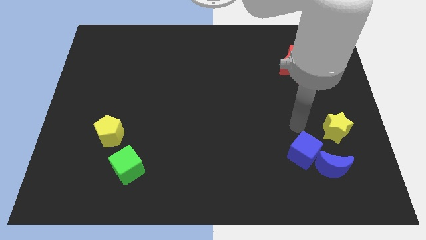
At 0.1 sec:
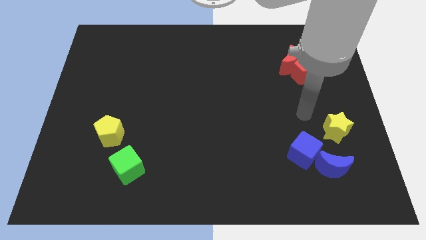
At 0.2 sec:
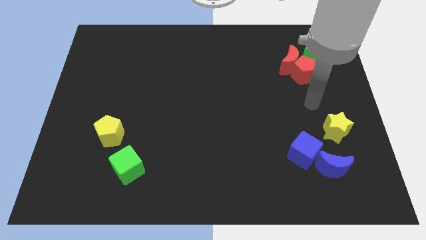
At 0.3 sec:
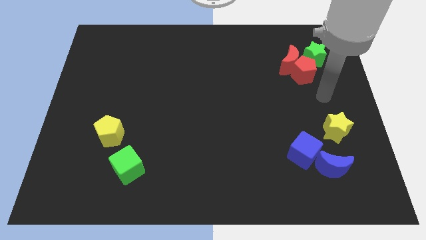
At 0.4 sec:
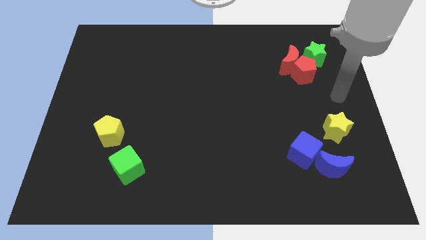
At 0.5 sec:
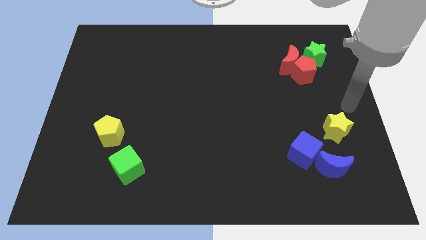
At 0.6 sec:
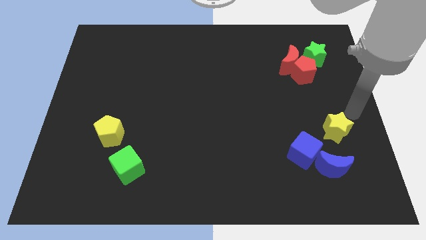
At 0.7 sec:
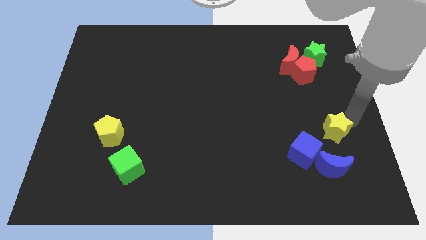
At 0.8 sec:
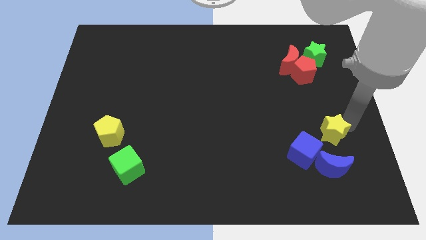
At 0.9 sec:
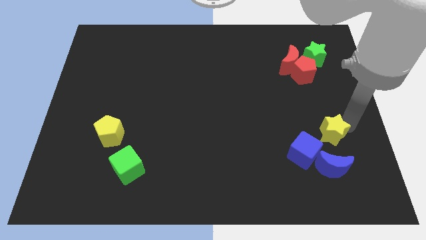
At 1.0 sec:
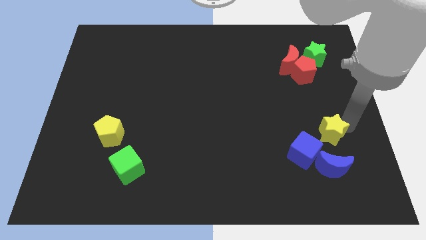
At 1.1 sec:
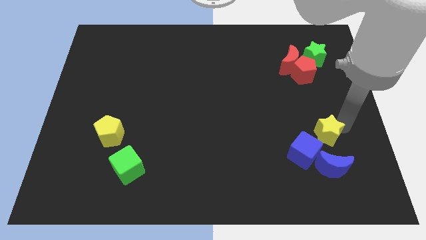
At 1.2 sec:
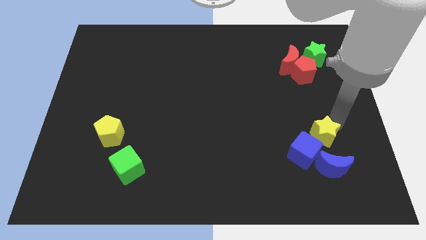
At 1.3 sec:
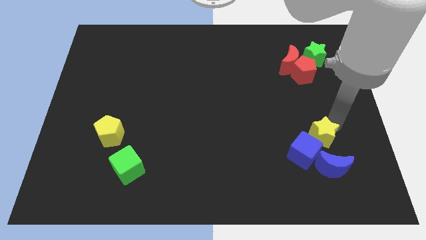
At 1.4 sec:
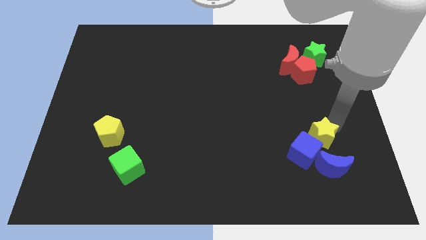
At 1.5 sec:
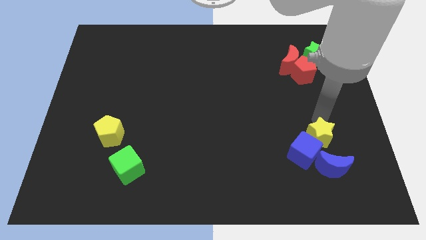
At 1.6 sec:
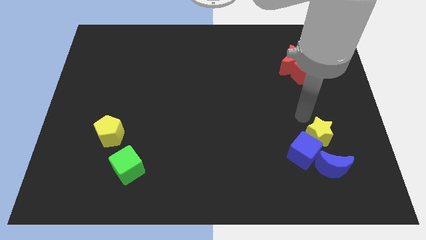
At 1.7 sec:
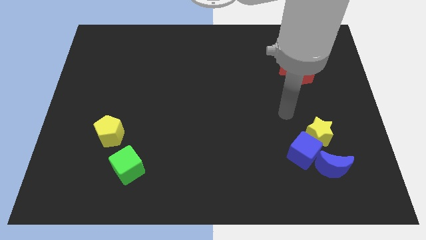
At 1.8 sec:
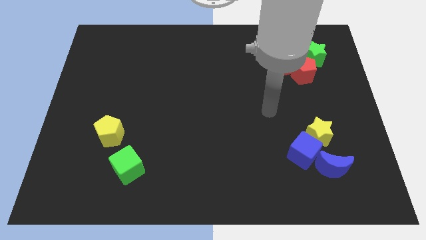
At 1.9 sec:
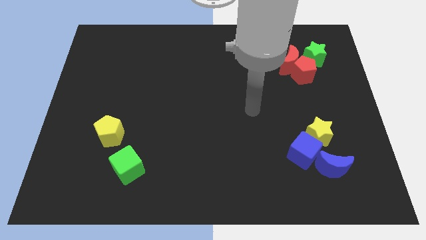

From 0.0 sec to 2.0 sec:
move the yellow star above to the blue cube

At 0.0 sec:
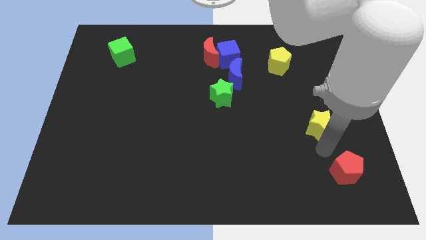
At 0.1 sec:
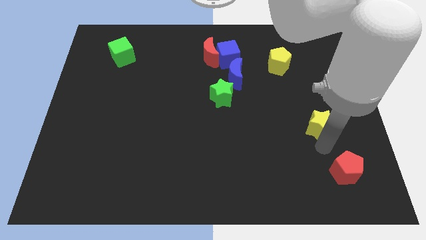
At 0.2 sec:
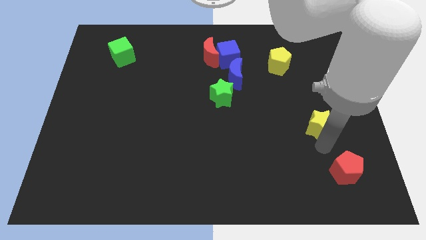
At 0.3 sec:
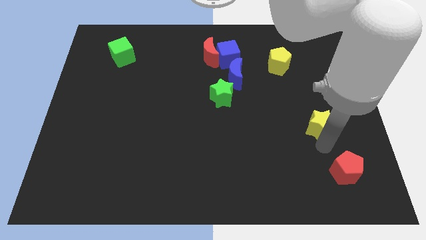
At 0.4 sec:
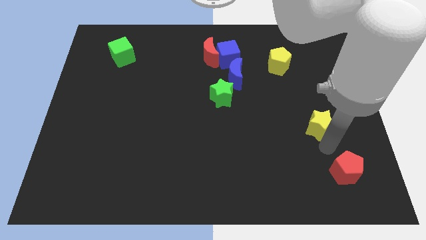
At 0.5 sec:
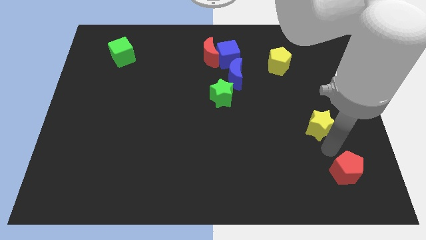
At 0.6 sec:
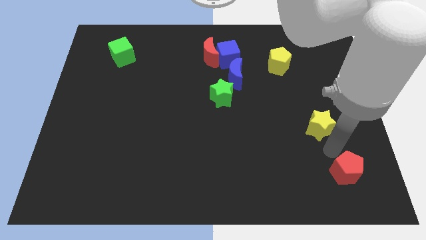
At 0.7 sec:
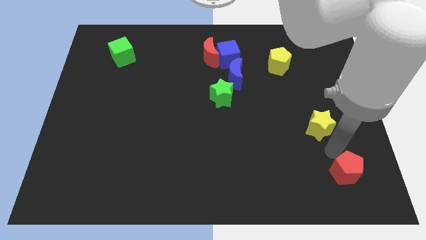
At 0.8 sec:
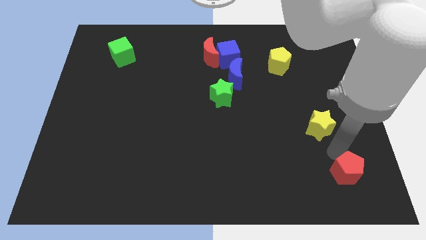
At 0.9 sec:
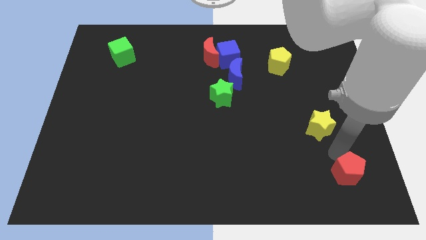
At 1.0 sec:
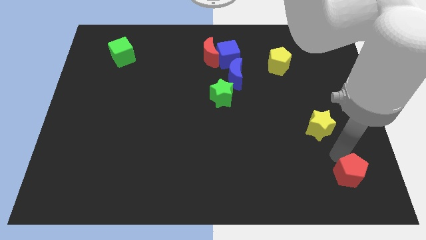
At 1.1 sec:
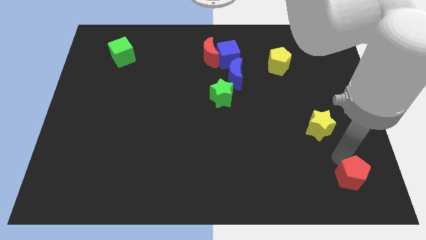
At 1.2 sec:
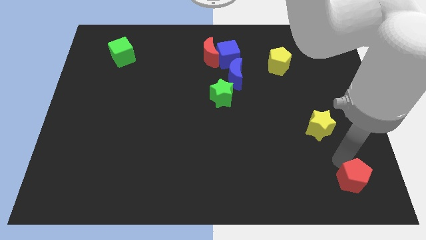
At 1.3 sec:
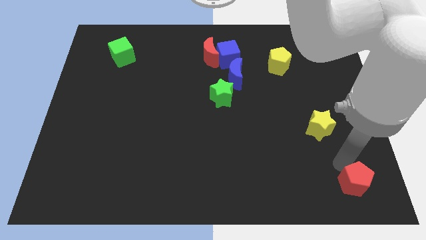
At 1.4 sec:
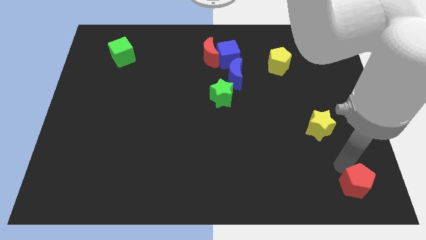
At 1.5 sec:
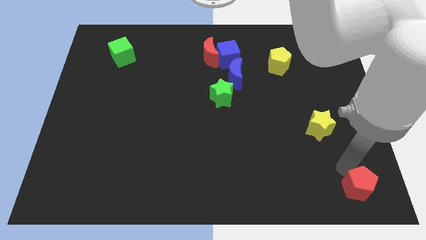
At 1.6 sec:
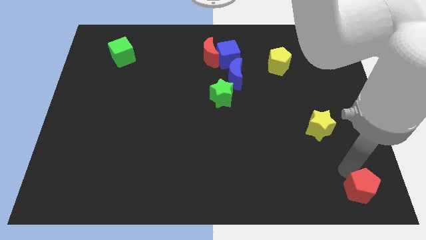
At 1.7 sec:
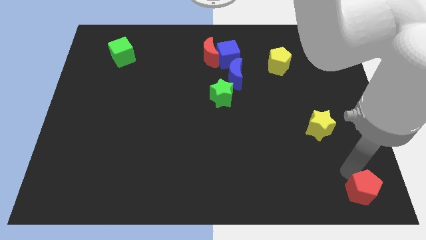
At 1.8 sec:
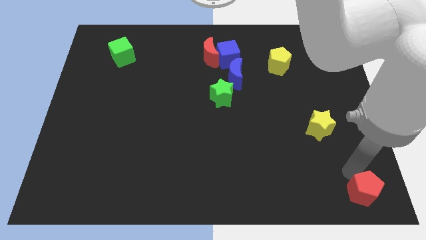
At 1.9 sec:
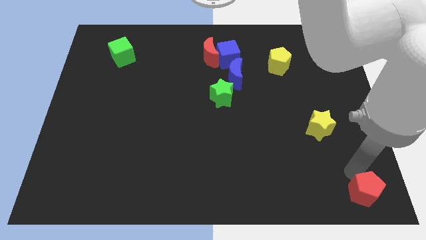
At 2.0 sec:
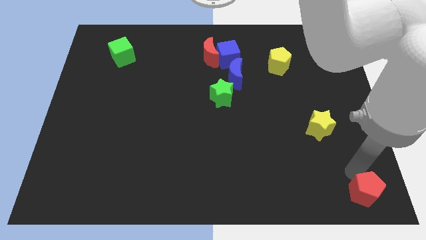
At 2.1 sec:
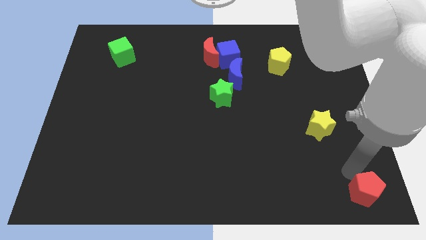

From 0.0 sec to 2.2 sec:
move the red pentagon to the bottom right side of the board

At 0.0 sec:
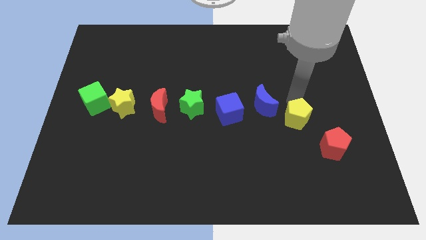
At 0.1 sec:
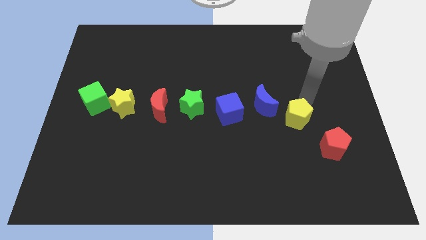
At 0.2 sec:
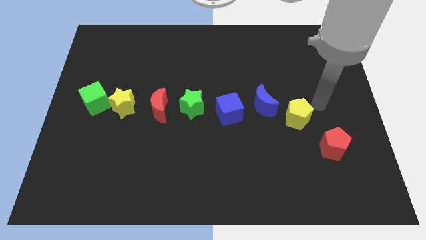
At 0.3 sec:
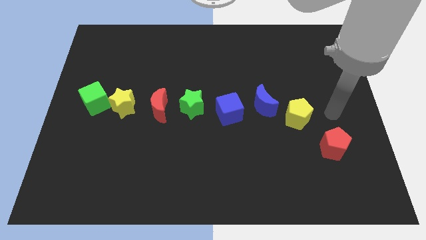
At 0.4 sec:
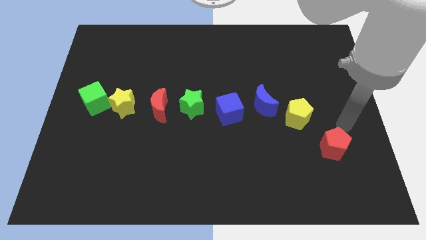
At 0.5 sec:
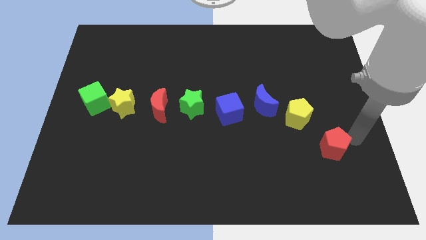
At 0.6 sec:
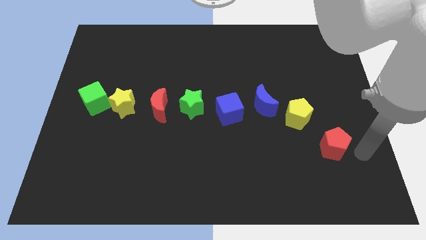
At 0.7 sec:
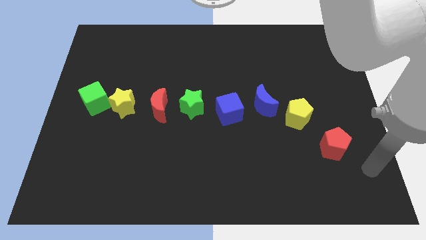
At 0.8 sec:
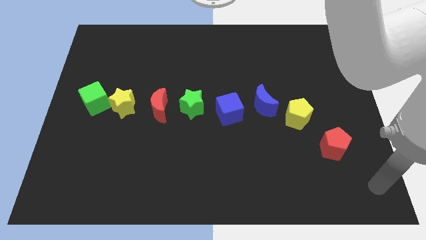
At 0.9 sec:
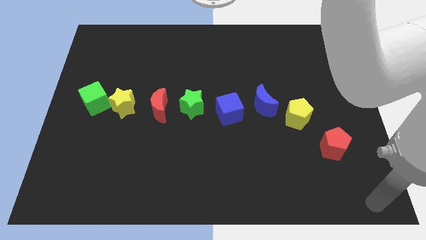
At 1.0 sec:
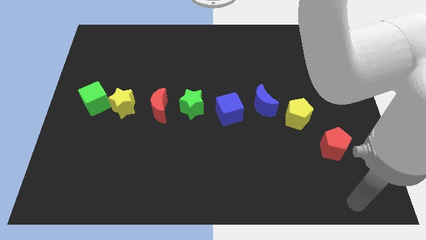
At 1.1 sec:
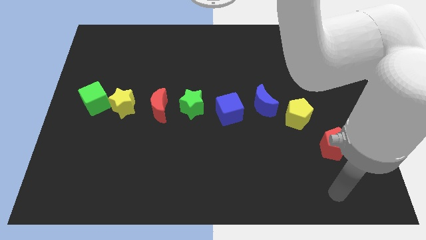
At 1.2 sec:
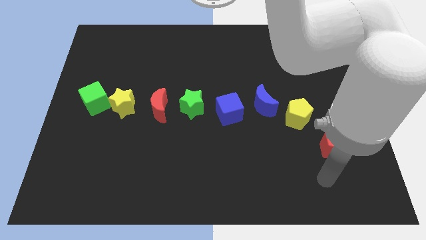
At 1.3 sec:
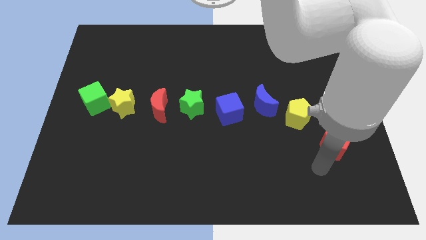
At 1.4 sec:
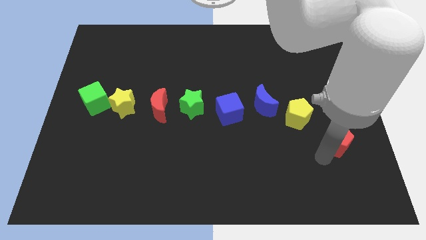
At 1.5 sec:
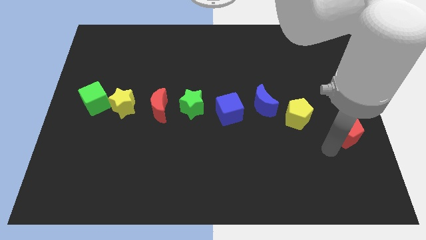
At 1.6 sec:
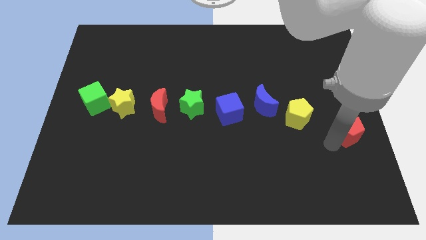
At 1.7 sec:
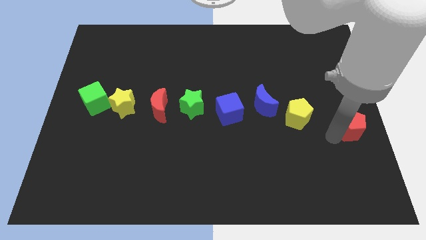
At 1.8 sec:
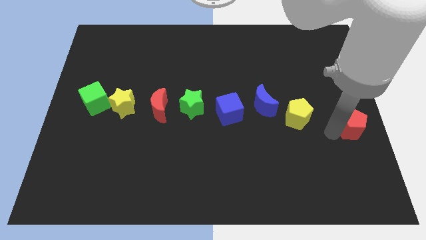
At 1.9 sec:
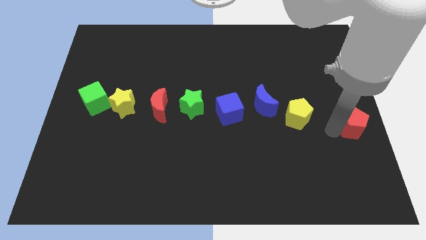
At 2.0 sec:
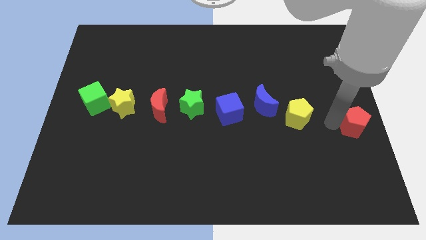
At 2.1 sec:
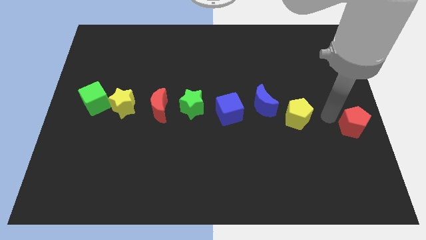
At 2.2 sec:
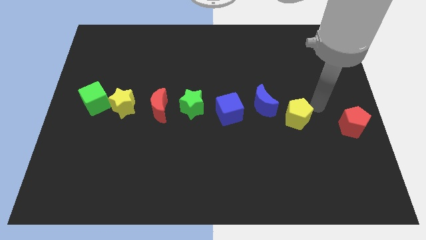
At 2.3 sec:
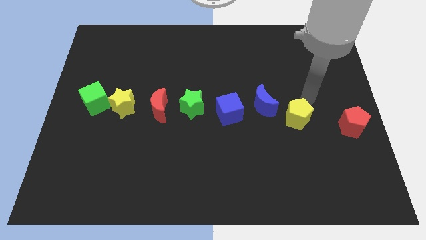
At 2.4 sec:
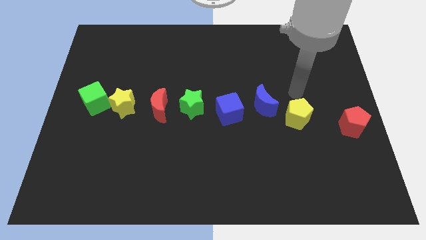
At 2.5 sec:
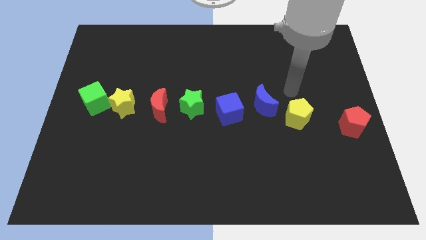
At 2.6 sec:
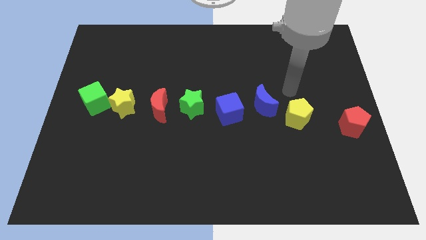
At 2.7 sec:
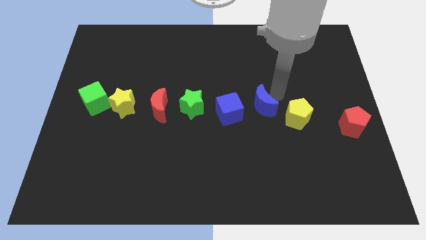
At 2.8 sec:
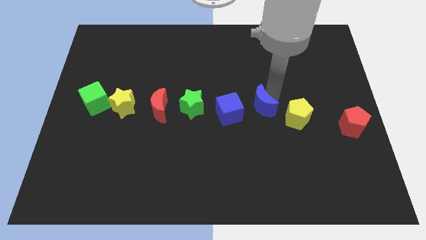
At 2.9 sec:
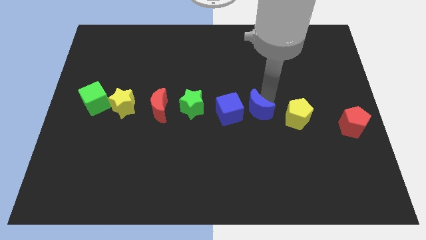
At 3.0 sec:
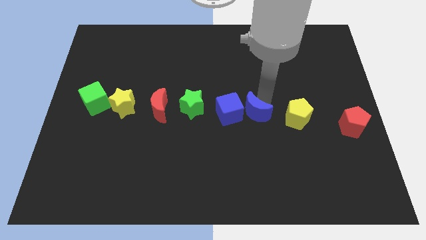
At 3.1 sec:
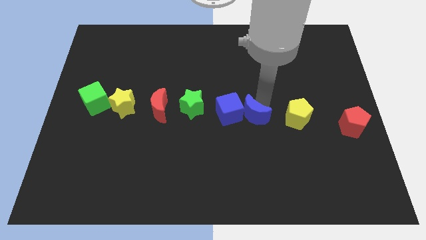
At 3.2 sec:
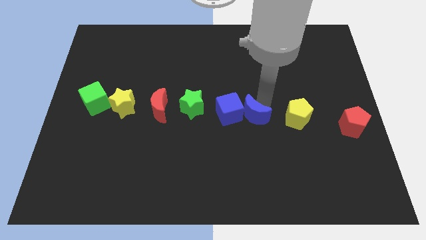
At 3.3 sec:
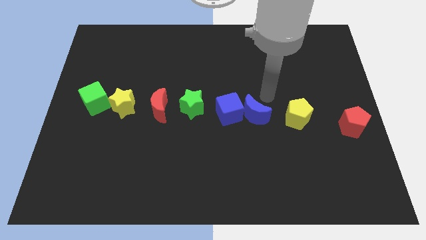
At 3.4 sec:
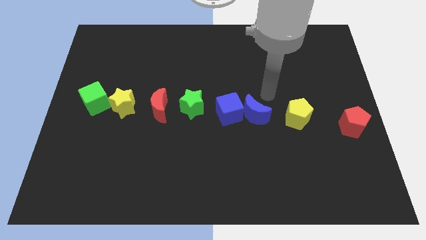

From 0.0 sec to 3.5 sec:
push the blue crescent into the blue cube

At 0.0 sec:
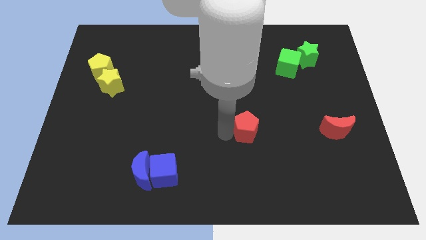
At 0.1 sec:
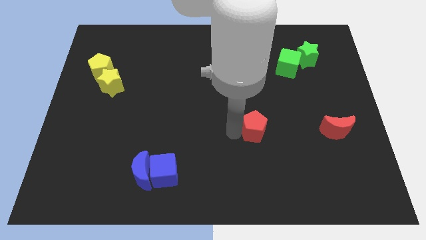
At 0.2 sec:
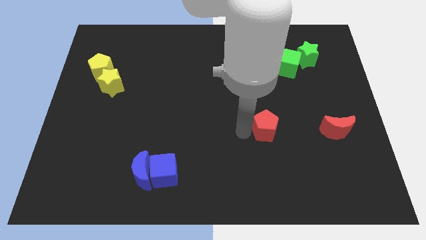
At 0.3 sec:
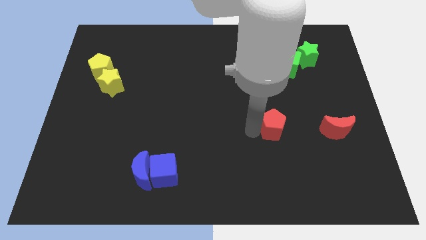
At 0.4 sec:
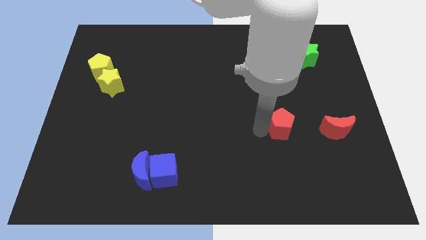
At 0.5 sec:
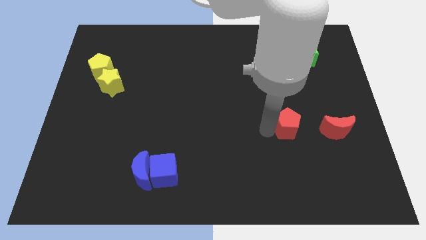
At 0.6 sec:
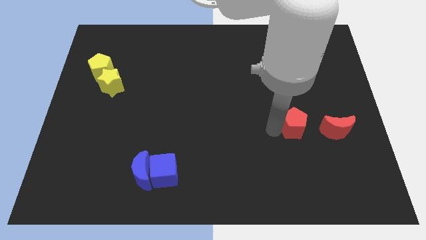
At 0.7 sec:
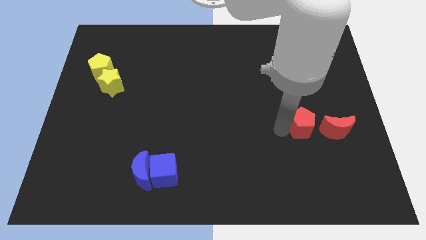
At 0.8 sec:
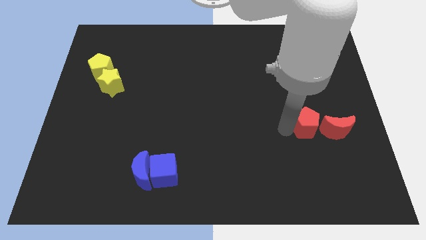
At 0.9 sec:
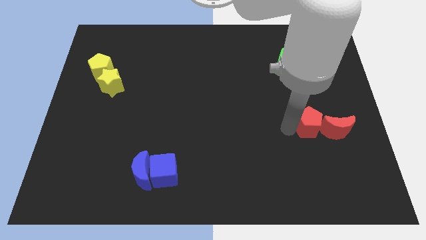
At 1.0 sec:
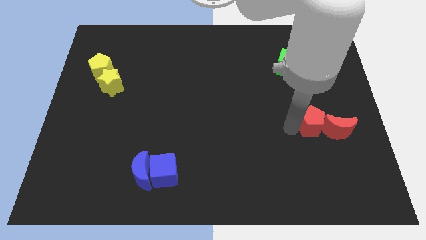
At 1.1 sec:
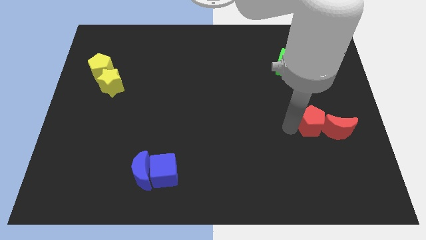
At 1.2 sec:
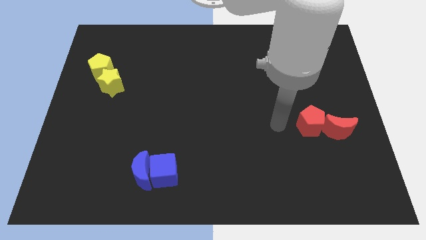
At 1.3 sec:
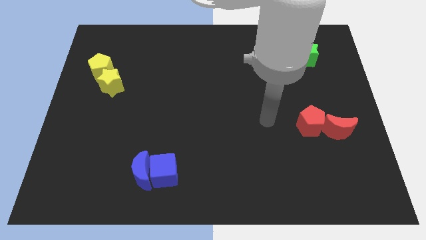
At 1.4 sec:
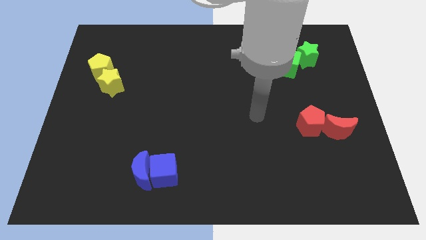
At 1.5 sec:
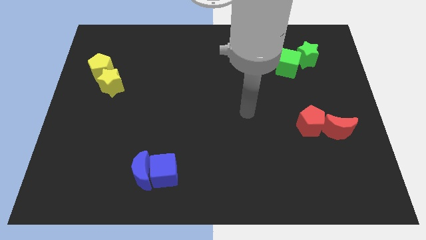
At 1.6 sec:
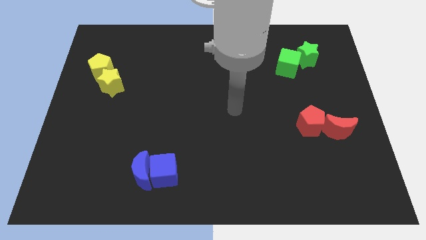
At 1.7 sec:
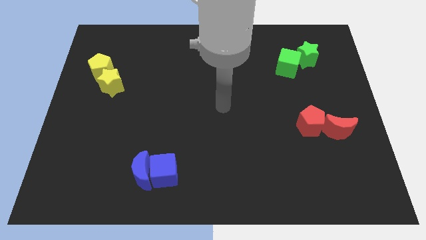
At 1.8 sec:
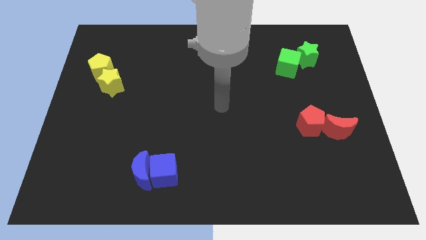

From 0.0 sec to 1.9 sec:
place the red pentagon close to red moon
